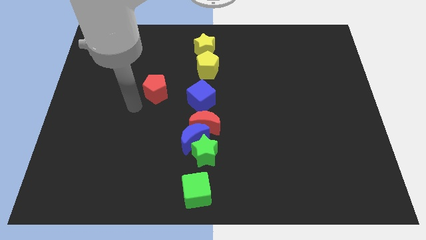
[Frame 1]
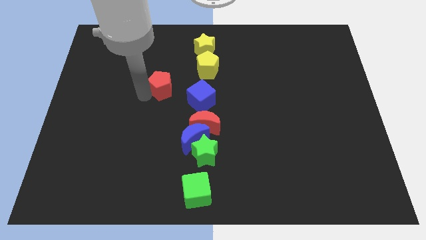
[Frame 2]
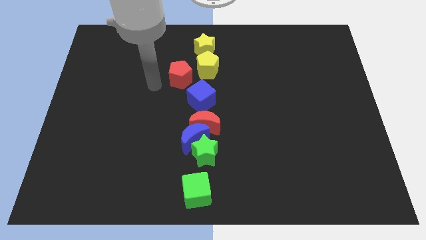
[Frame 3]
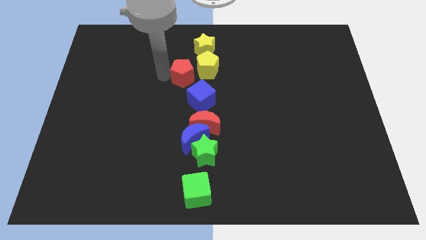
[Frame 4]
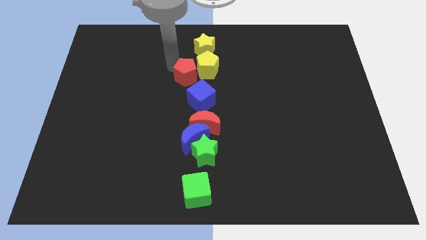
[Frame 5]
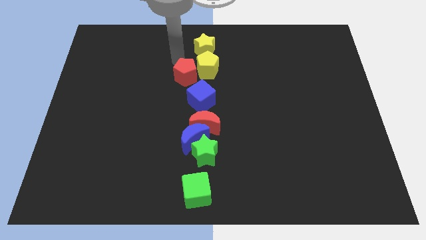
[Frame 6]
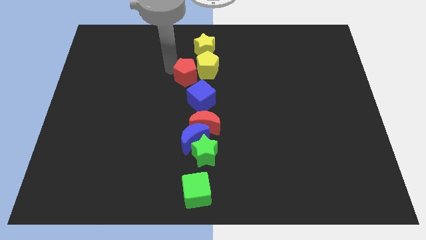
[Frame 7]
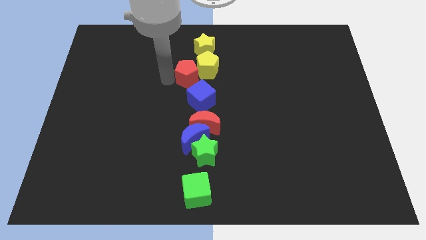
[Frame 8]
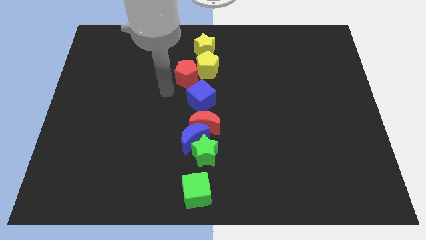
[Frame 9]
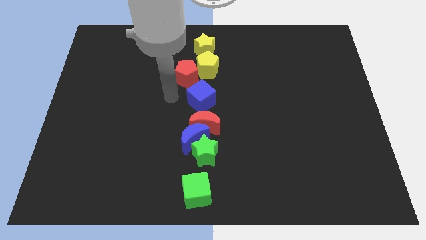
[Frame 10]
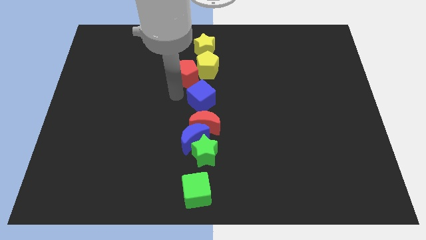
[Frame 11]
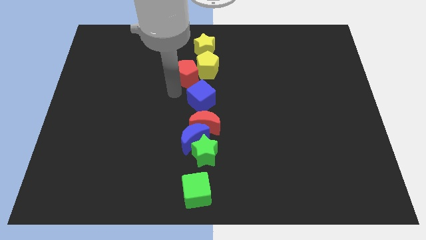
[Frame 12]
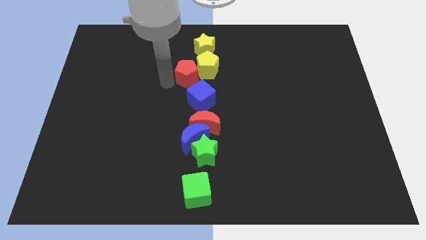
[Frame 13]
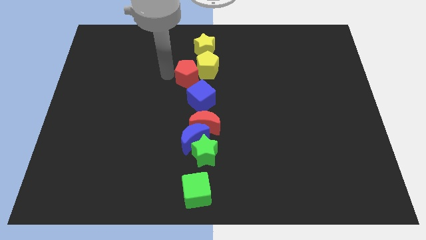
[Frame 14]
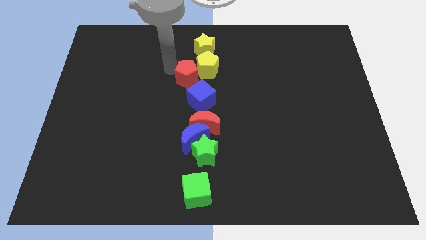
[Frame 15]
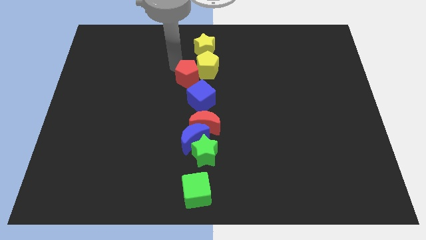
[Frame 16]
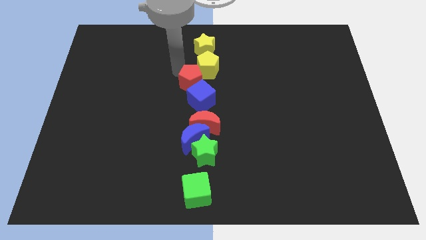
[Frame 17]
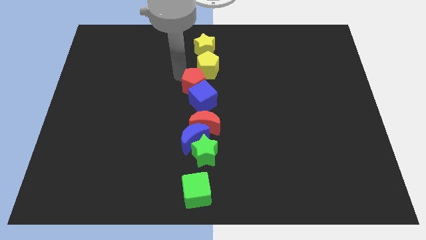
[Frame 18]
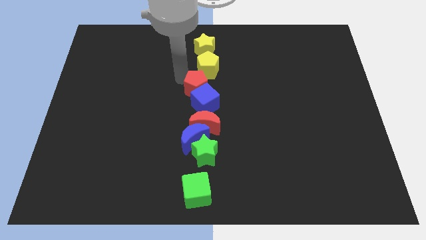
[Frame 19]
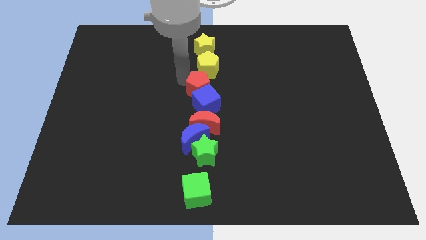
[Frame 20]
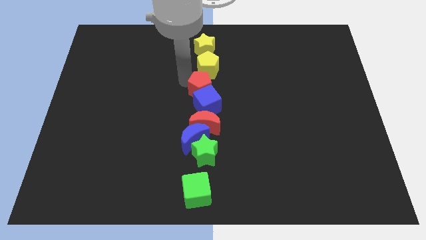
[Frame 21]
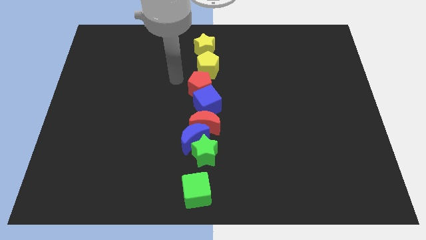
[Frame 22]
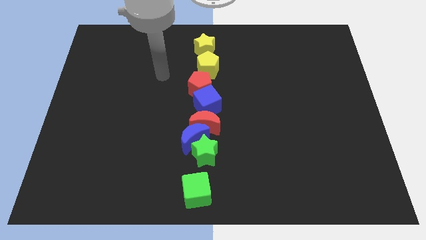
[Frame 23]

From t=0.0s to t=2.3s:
move the red pentagon in between the yellow pentagon and blue cube

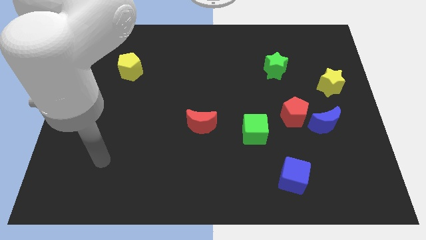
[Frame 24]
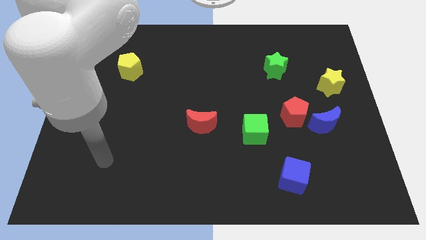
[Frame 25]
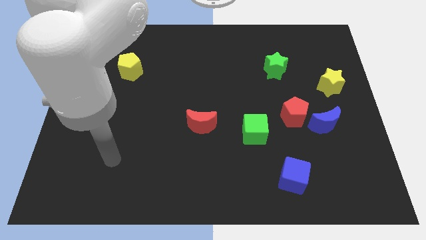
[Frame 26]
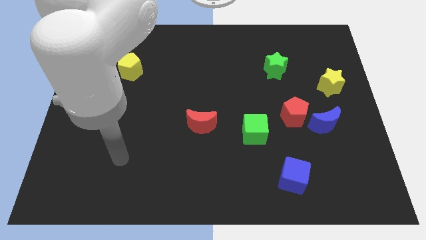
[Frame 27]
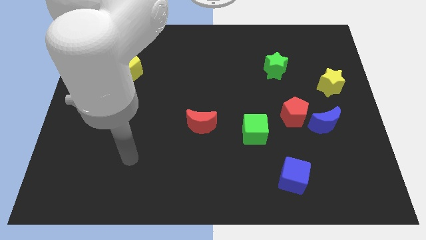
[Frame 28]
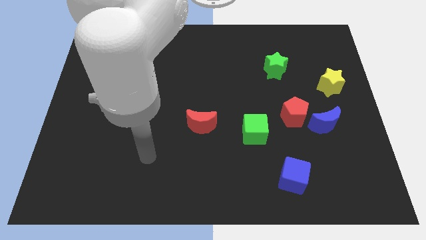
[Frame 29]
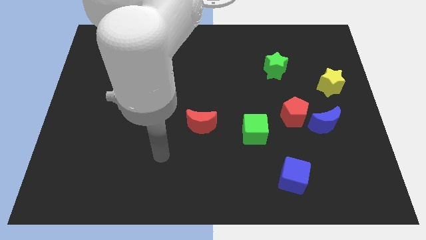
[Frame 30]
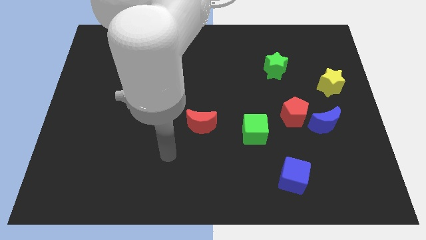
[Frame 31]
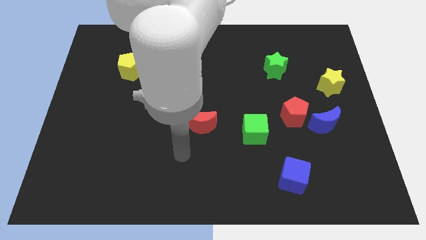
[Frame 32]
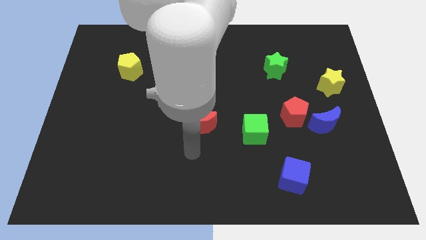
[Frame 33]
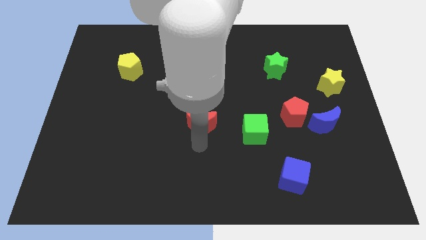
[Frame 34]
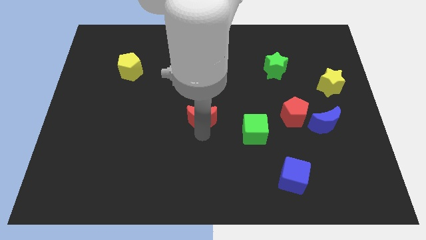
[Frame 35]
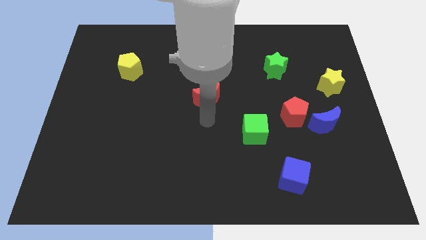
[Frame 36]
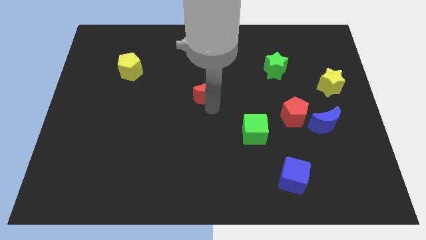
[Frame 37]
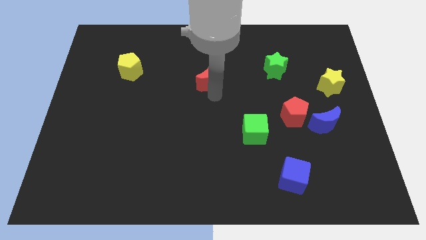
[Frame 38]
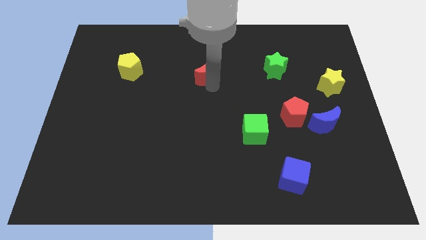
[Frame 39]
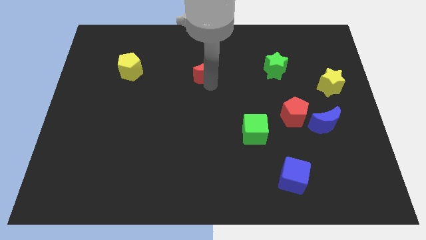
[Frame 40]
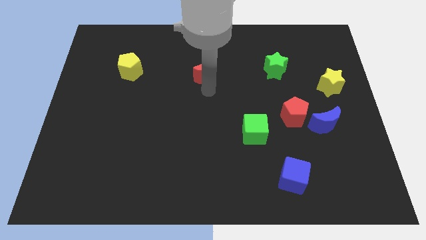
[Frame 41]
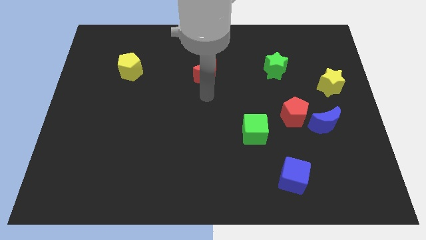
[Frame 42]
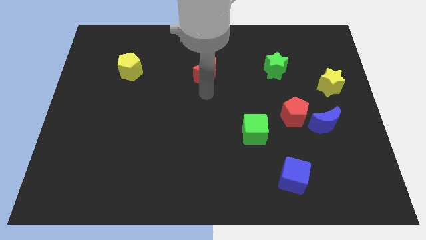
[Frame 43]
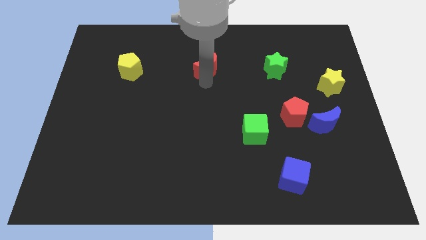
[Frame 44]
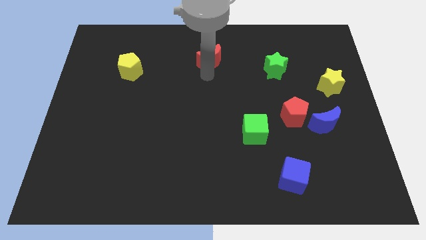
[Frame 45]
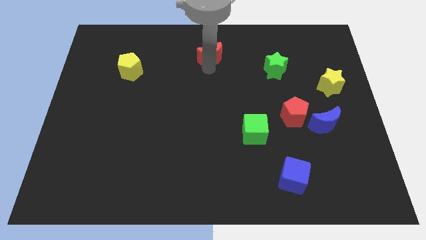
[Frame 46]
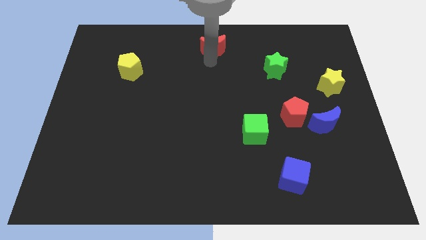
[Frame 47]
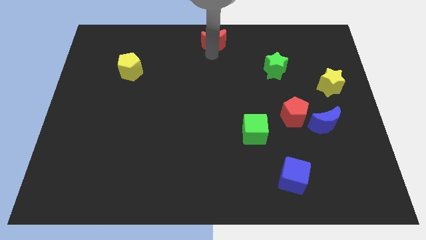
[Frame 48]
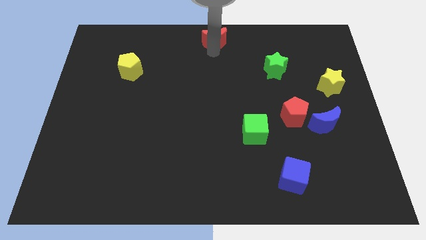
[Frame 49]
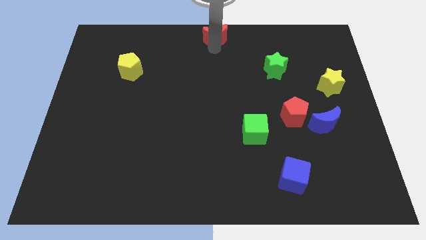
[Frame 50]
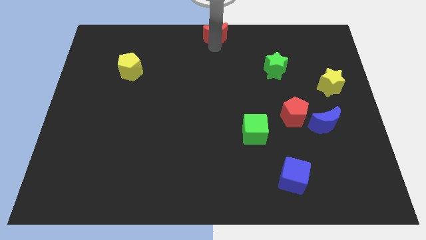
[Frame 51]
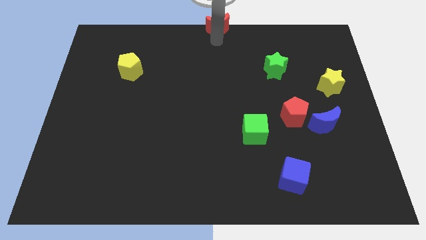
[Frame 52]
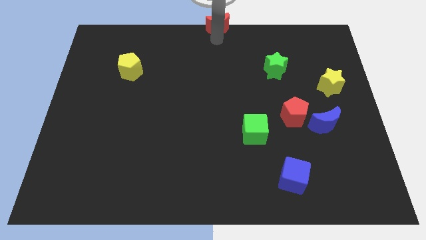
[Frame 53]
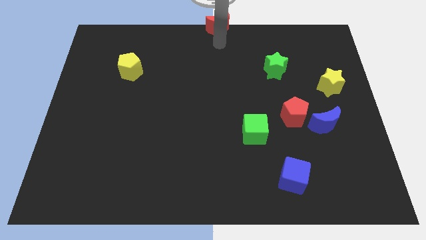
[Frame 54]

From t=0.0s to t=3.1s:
move the red crescent to the top center of the board

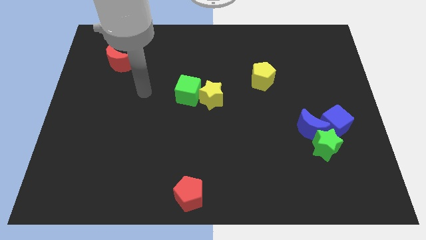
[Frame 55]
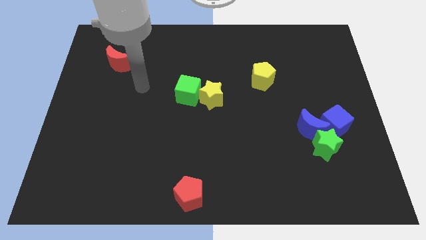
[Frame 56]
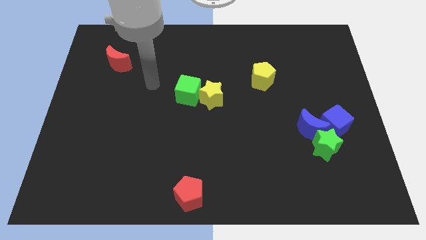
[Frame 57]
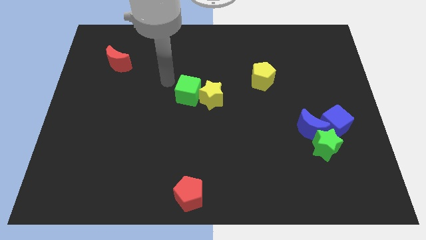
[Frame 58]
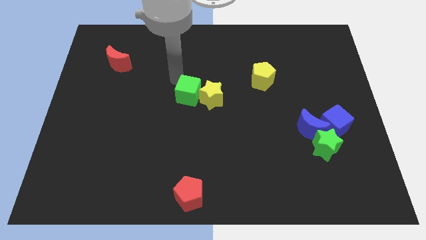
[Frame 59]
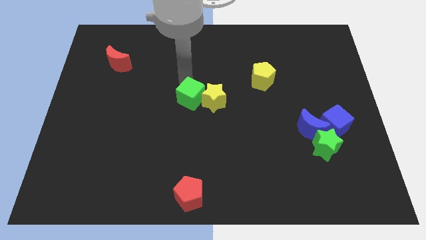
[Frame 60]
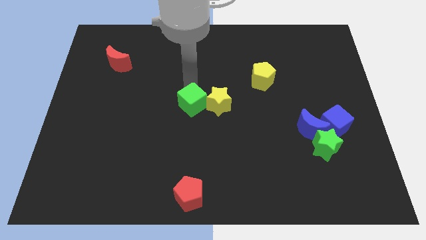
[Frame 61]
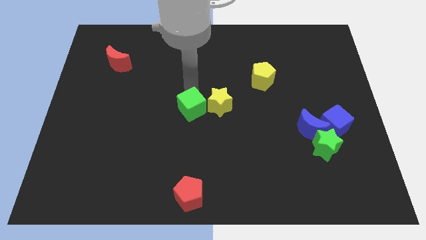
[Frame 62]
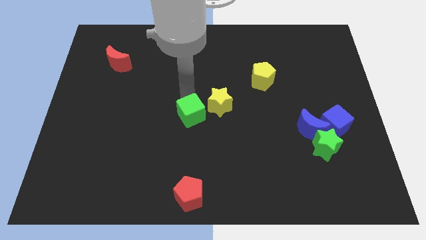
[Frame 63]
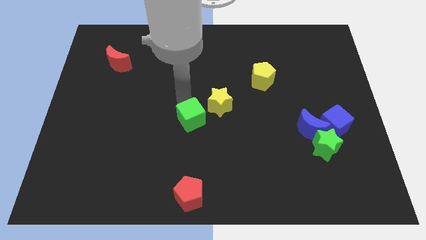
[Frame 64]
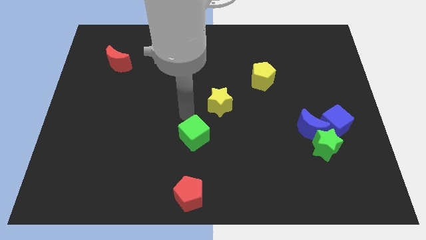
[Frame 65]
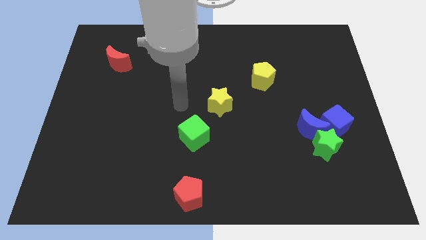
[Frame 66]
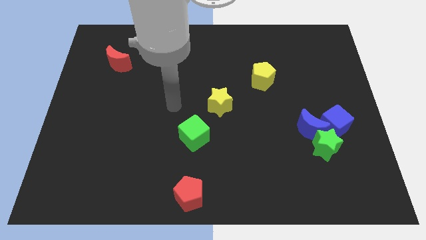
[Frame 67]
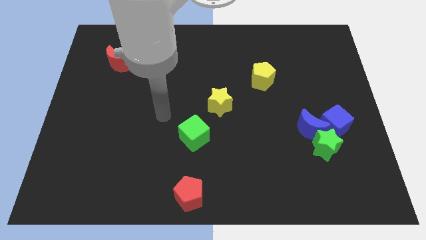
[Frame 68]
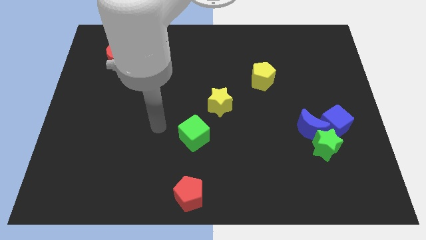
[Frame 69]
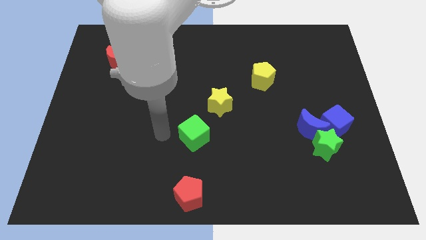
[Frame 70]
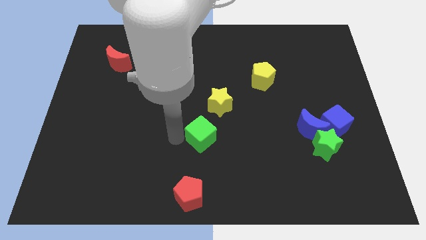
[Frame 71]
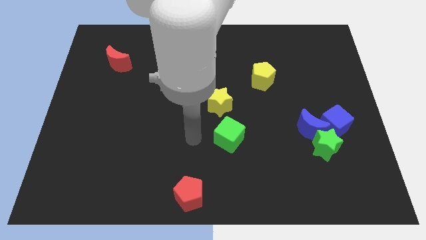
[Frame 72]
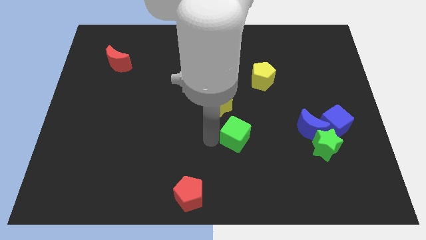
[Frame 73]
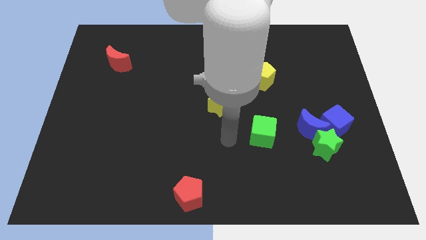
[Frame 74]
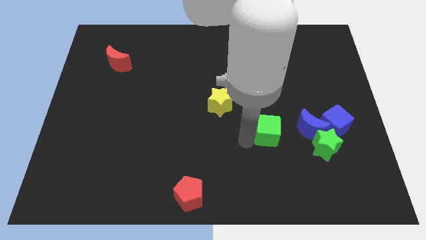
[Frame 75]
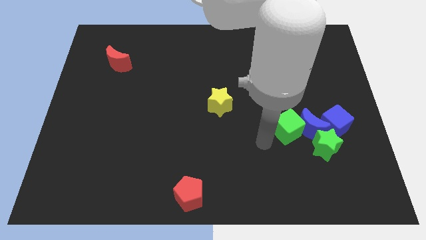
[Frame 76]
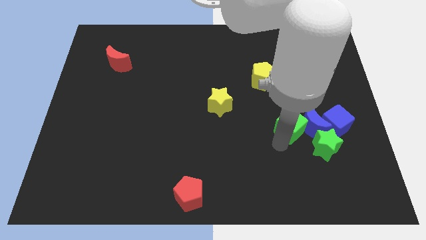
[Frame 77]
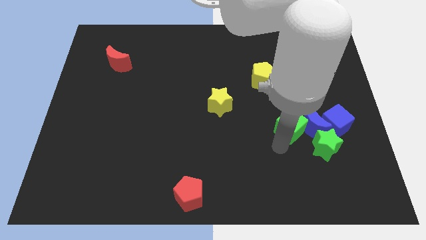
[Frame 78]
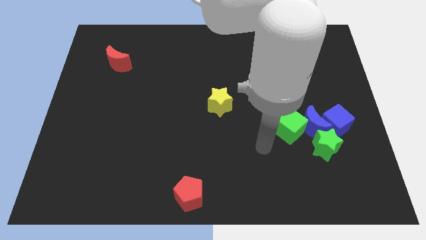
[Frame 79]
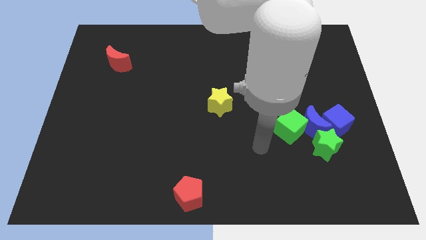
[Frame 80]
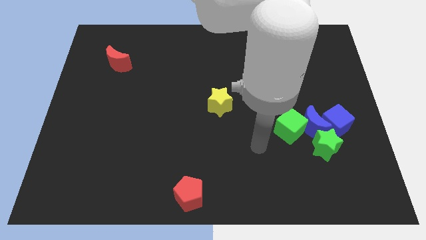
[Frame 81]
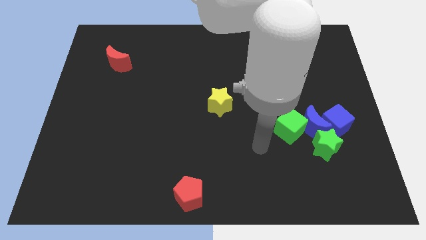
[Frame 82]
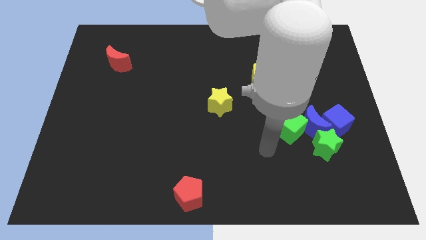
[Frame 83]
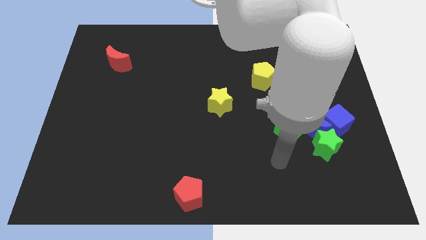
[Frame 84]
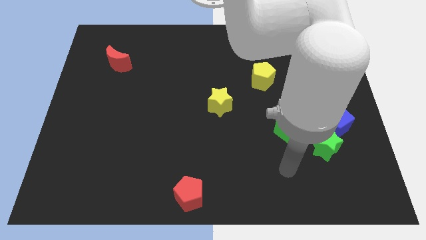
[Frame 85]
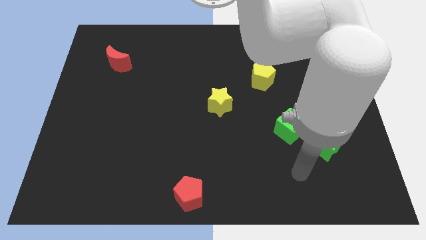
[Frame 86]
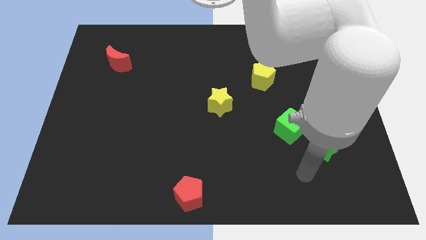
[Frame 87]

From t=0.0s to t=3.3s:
push the green cube into the group of blocks

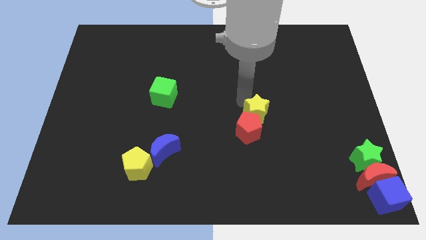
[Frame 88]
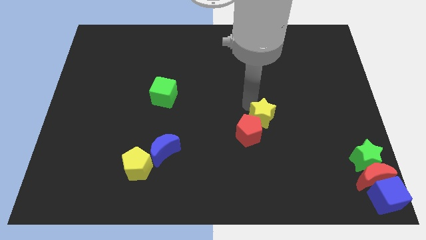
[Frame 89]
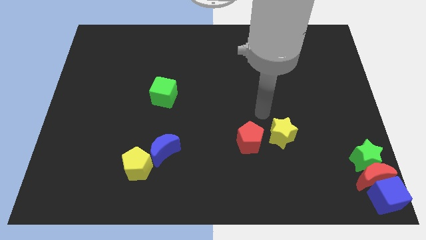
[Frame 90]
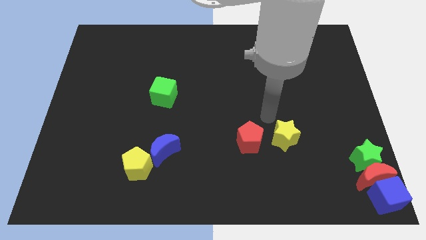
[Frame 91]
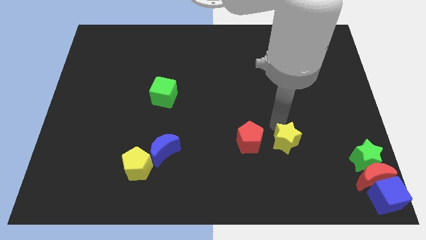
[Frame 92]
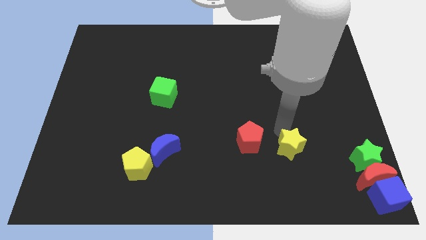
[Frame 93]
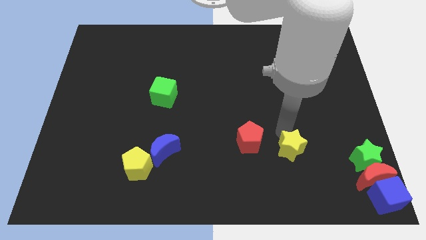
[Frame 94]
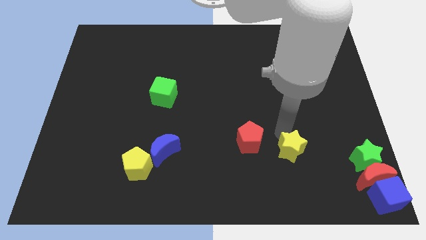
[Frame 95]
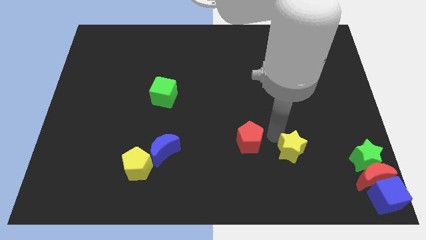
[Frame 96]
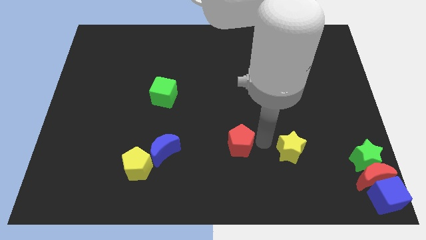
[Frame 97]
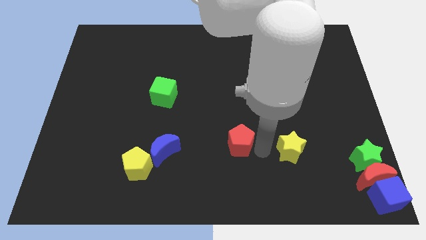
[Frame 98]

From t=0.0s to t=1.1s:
place yellow star to the right of red pentagon
